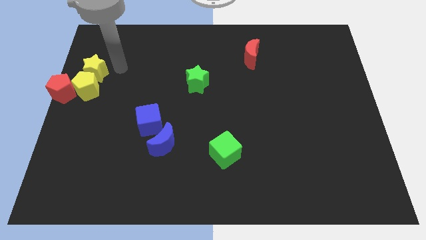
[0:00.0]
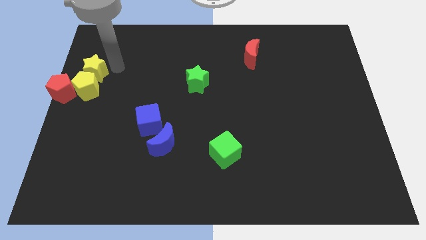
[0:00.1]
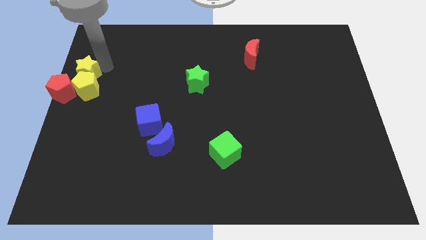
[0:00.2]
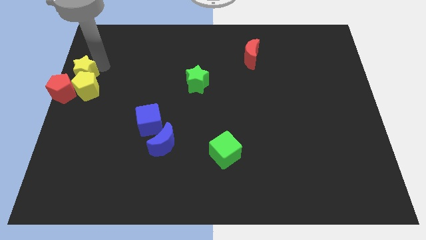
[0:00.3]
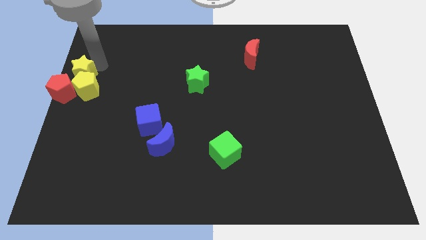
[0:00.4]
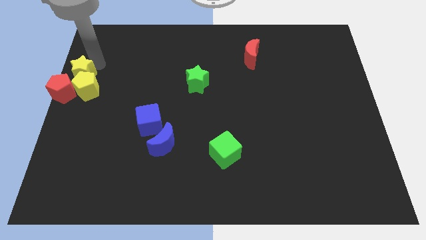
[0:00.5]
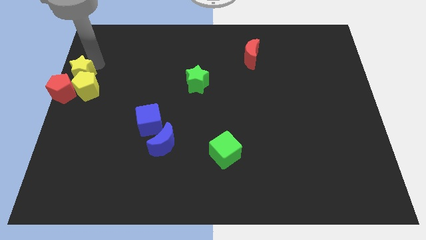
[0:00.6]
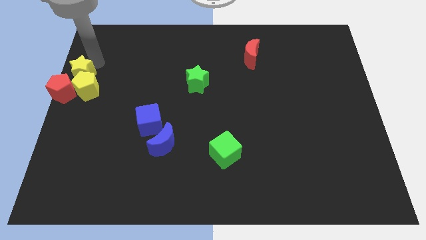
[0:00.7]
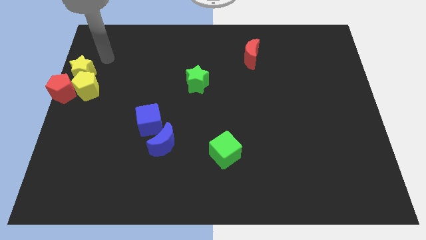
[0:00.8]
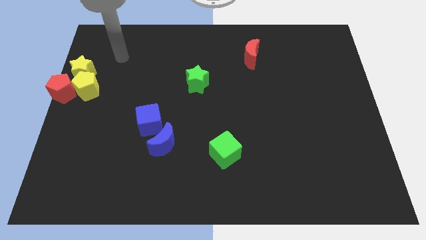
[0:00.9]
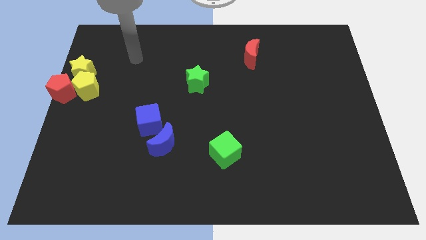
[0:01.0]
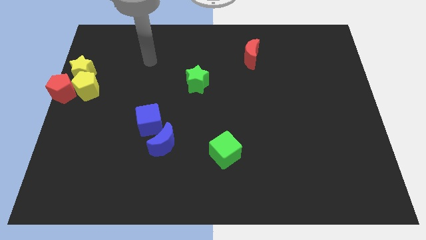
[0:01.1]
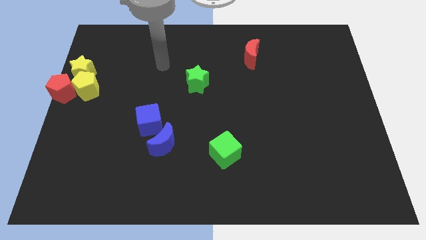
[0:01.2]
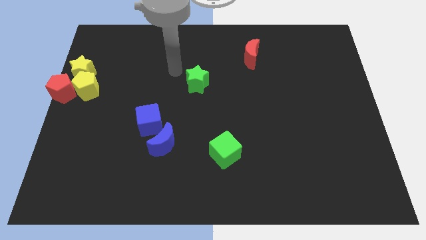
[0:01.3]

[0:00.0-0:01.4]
put the yellow star to the top right side of the red pentagon

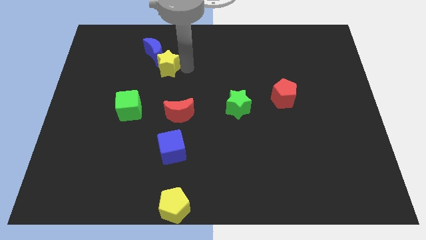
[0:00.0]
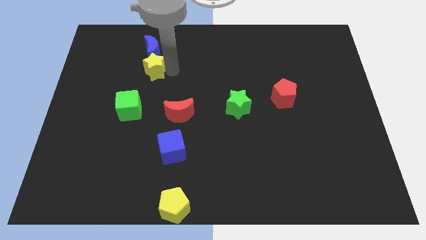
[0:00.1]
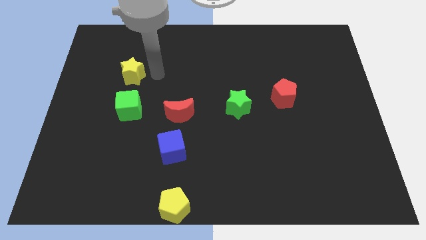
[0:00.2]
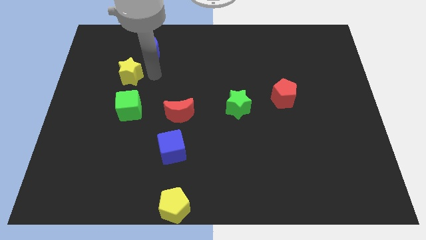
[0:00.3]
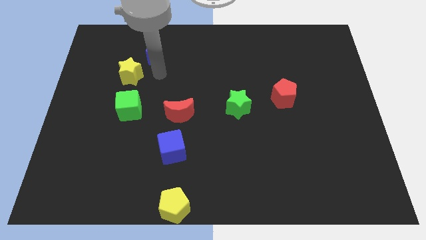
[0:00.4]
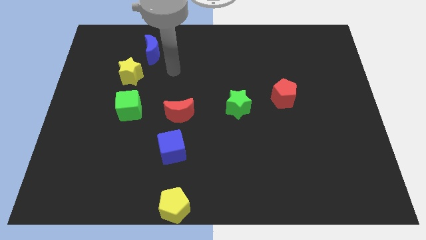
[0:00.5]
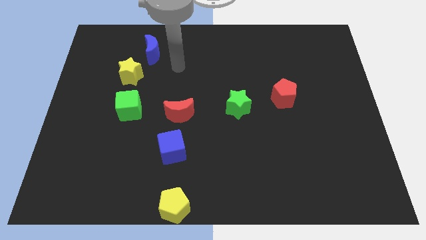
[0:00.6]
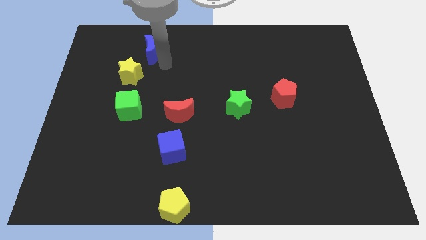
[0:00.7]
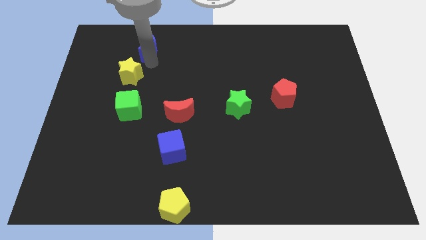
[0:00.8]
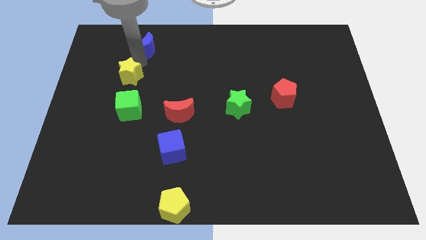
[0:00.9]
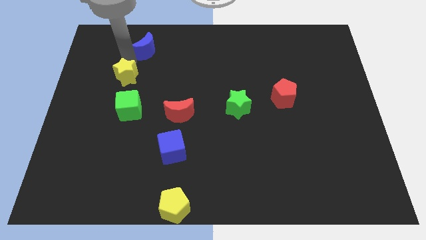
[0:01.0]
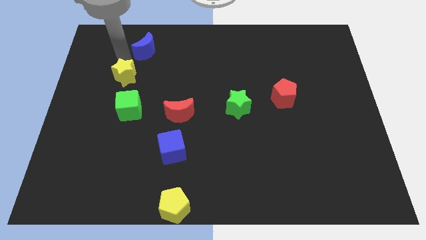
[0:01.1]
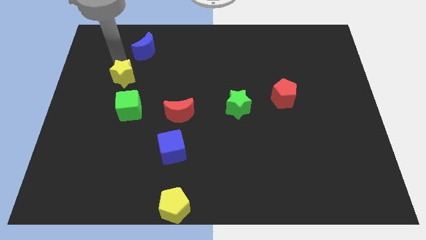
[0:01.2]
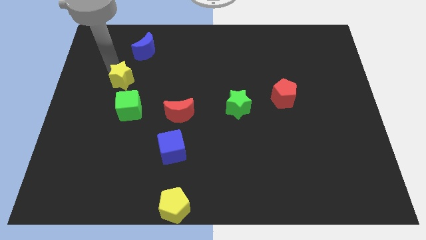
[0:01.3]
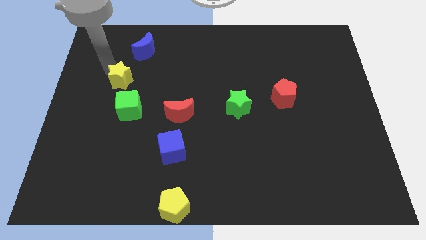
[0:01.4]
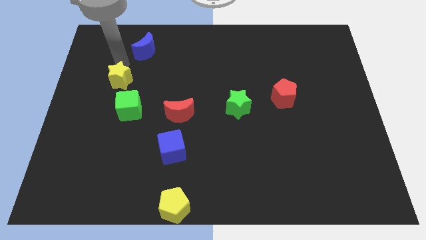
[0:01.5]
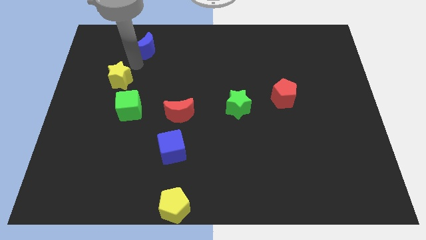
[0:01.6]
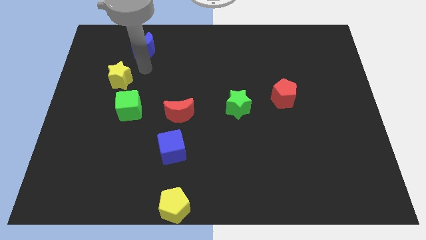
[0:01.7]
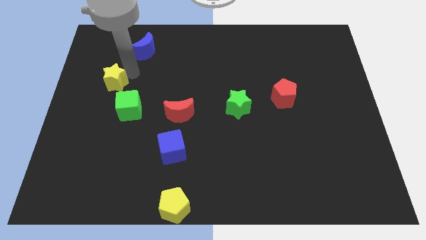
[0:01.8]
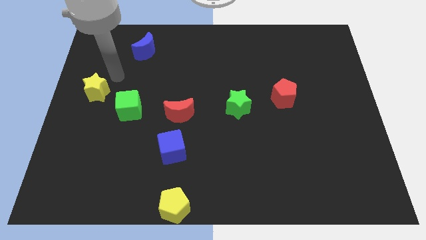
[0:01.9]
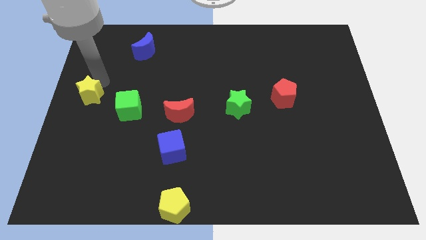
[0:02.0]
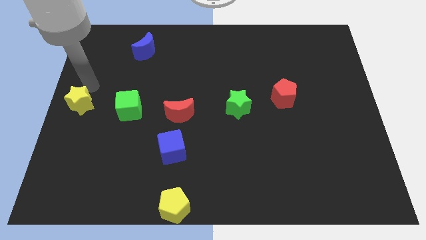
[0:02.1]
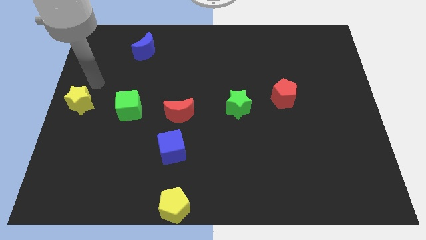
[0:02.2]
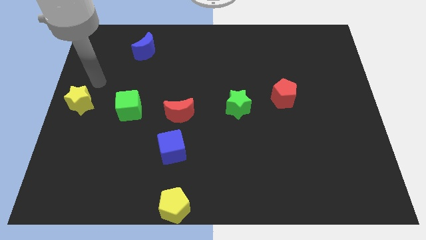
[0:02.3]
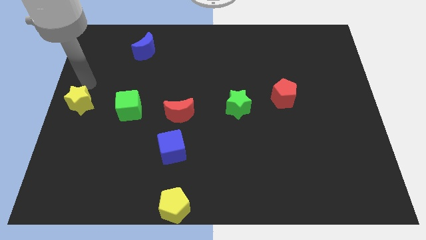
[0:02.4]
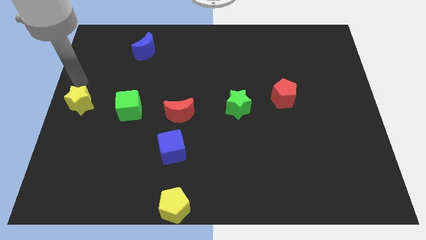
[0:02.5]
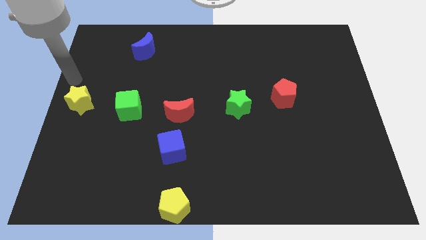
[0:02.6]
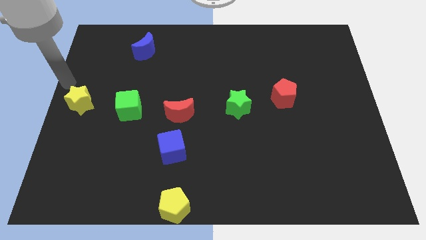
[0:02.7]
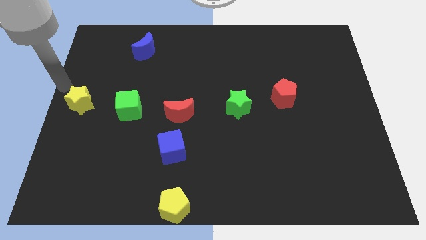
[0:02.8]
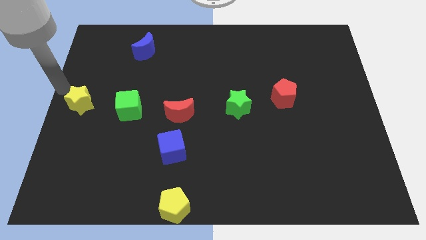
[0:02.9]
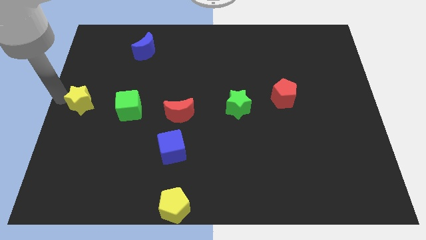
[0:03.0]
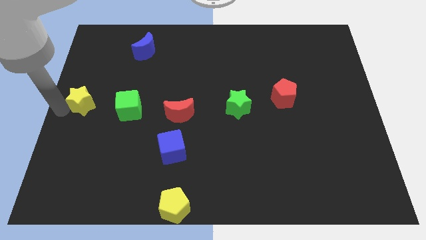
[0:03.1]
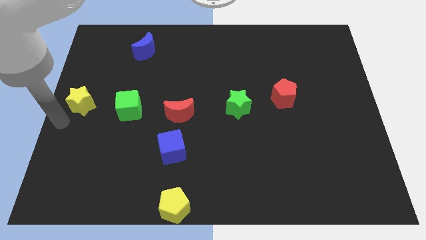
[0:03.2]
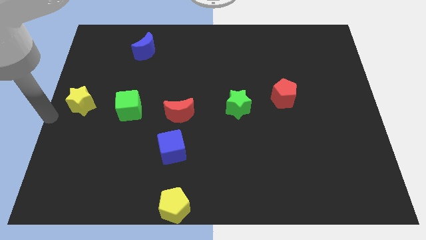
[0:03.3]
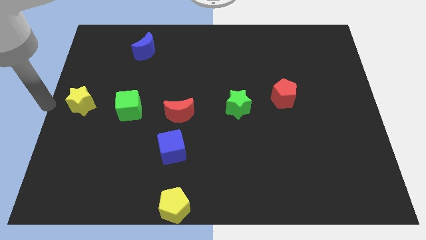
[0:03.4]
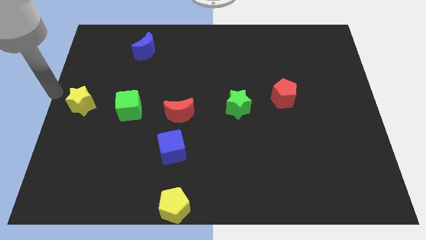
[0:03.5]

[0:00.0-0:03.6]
separate blue moon and yellow star

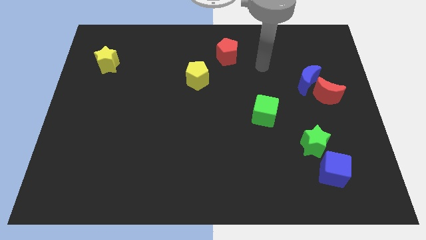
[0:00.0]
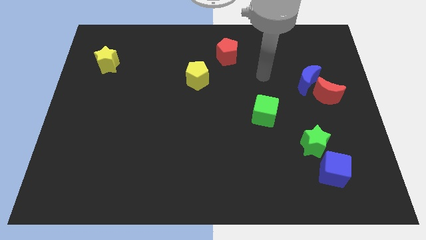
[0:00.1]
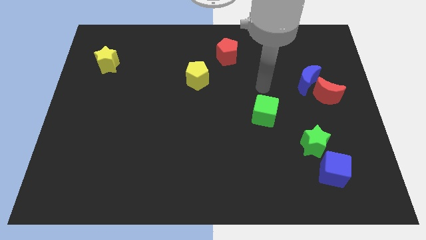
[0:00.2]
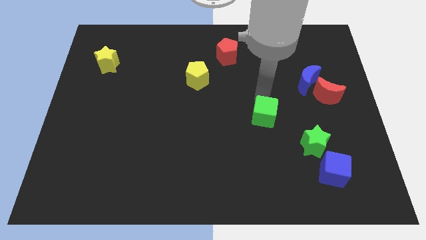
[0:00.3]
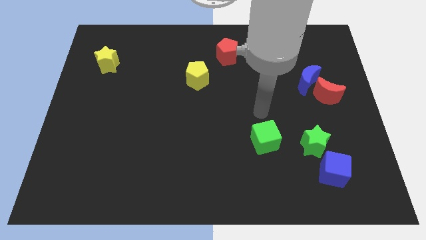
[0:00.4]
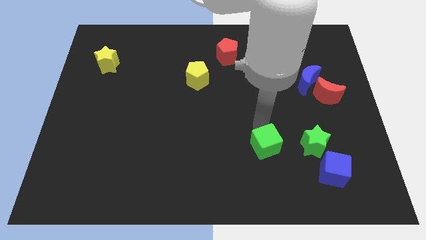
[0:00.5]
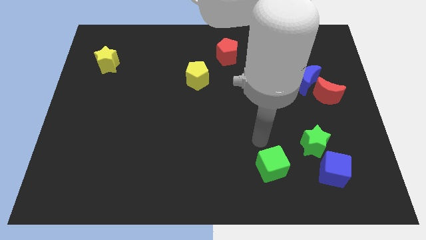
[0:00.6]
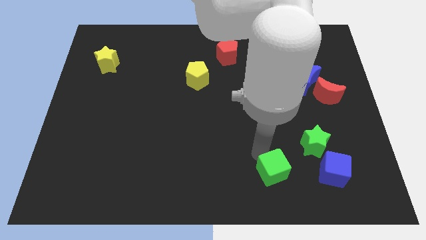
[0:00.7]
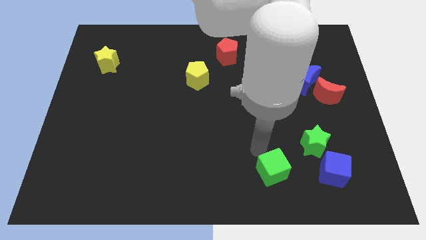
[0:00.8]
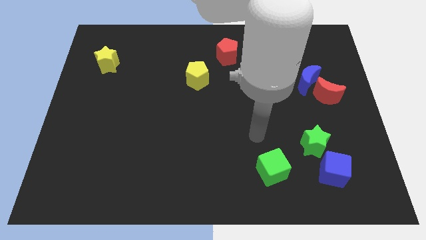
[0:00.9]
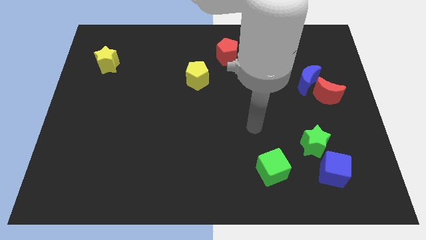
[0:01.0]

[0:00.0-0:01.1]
slide the green cube towards bottom

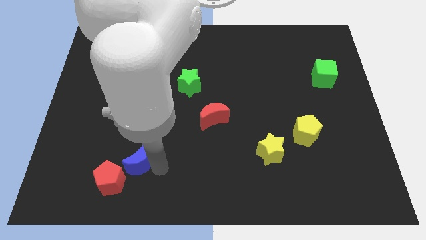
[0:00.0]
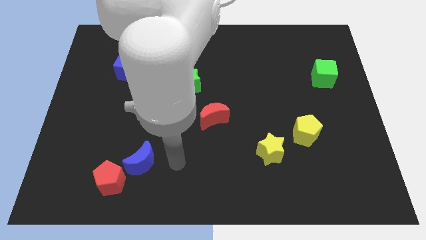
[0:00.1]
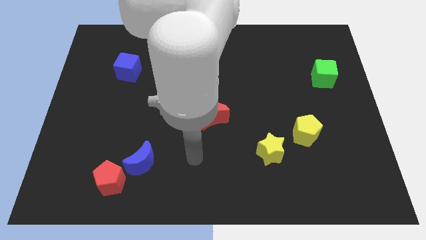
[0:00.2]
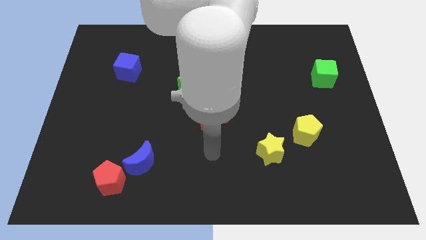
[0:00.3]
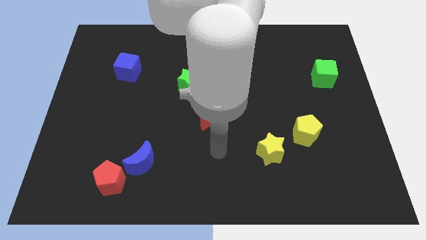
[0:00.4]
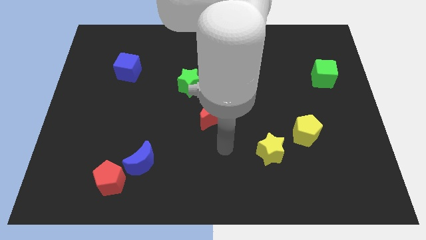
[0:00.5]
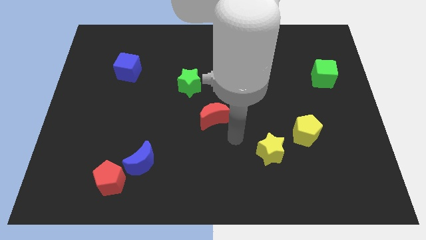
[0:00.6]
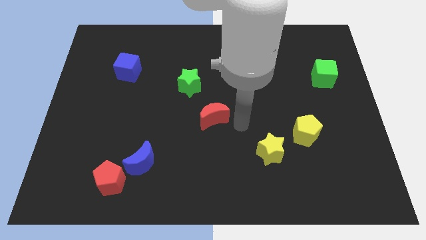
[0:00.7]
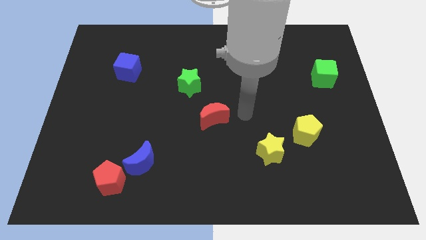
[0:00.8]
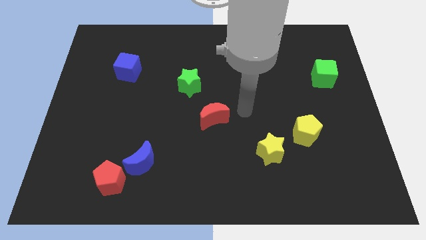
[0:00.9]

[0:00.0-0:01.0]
move away from the blue moon

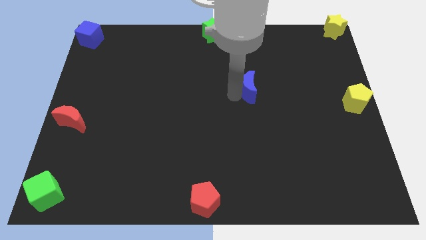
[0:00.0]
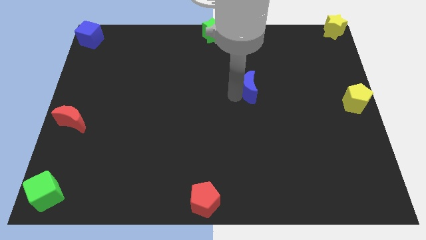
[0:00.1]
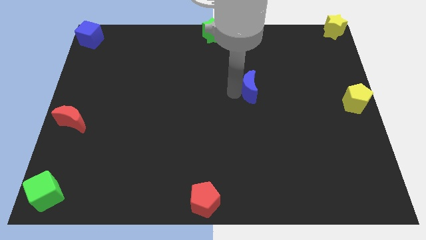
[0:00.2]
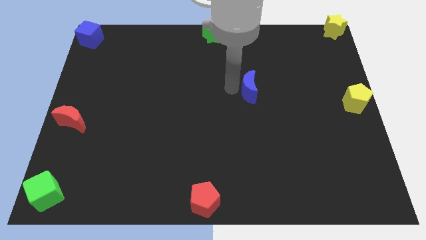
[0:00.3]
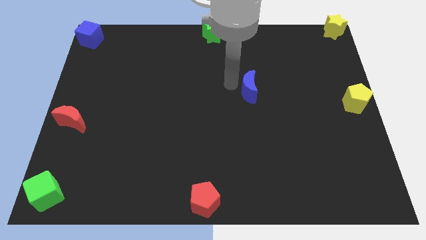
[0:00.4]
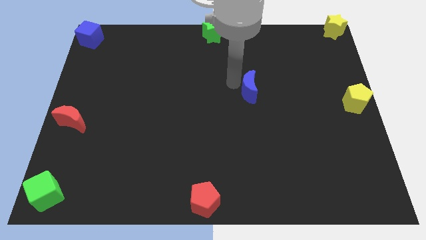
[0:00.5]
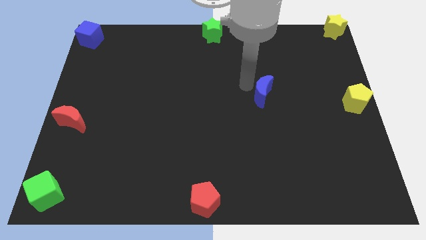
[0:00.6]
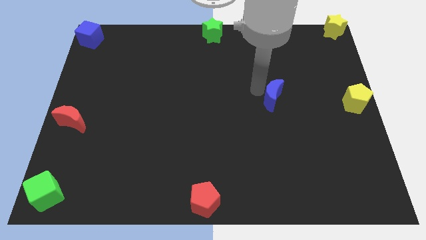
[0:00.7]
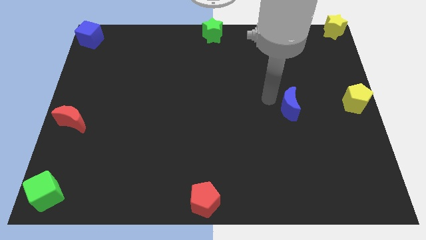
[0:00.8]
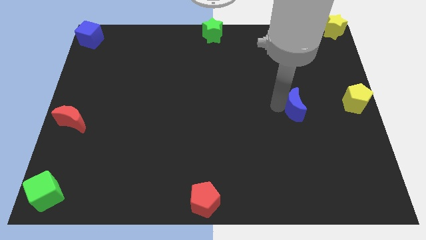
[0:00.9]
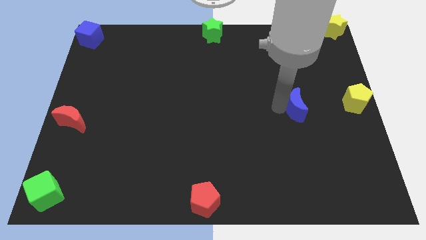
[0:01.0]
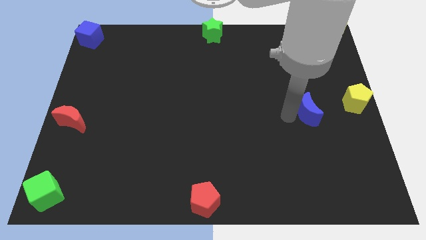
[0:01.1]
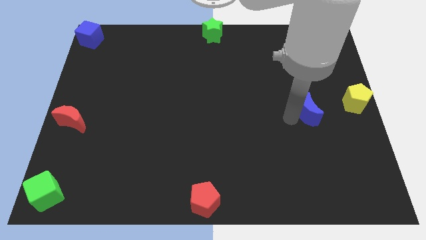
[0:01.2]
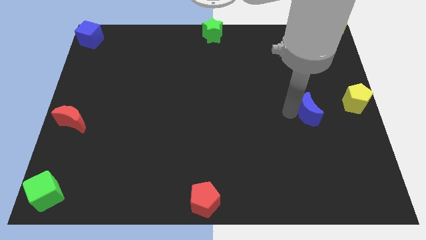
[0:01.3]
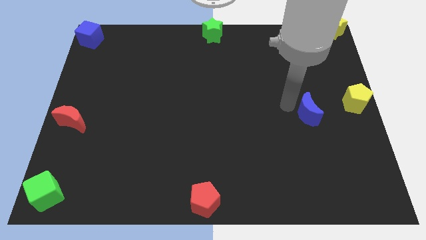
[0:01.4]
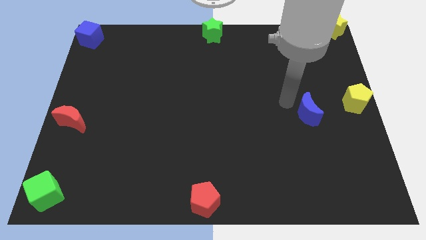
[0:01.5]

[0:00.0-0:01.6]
drag the blue moon towards the yellow pentagon

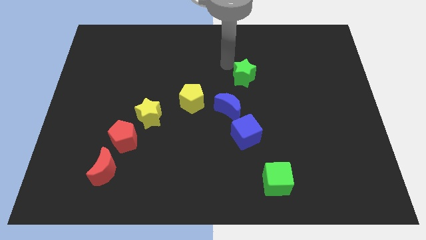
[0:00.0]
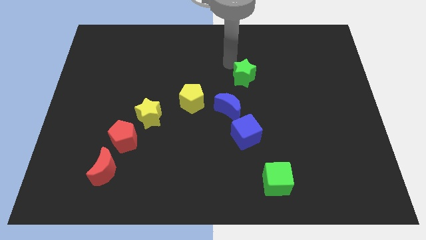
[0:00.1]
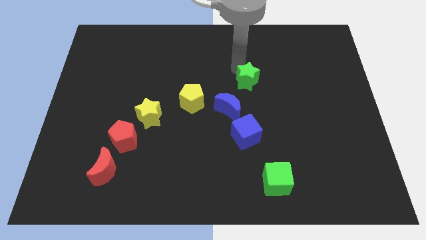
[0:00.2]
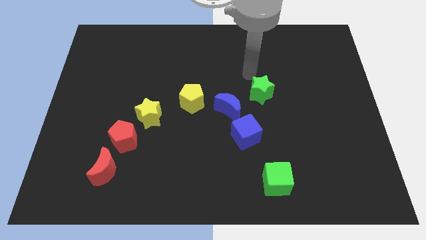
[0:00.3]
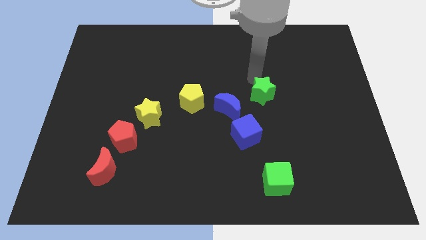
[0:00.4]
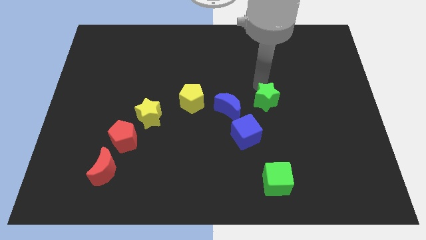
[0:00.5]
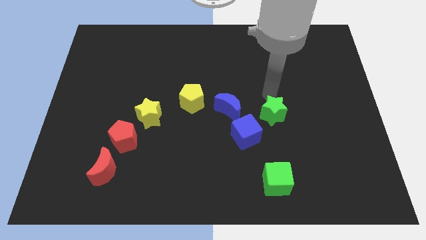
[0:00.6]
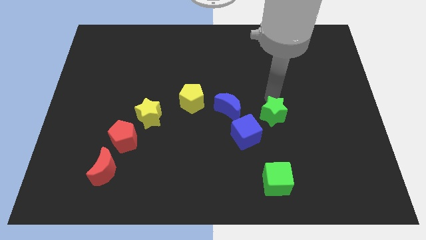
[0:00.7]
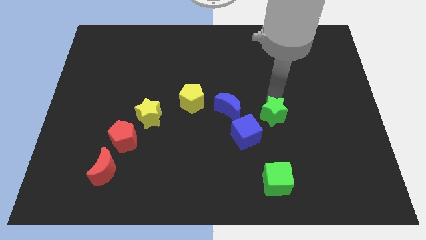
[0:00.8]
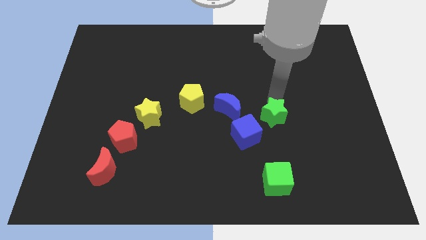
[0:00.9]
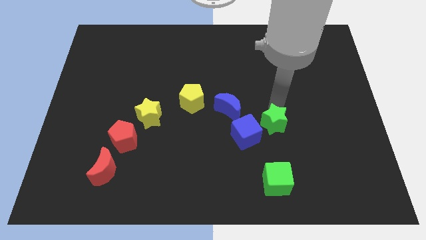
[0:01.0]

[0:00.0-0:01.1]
move the green star towards the green cube
